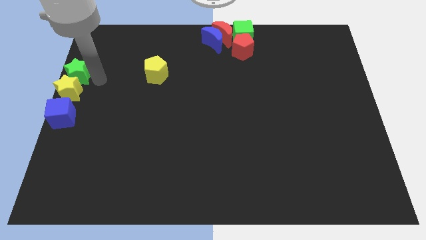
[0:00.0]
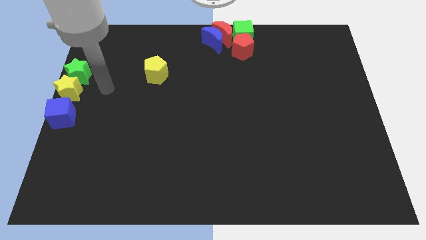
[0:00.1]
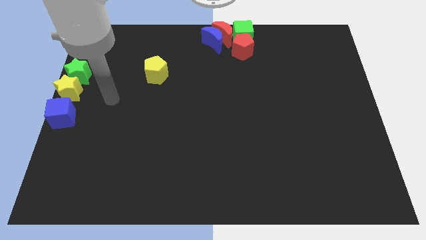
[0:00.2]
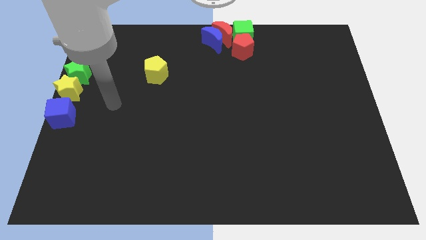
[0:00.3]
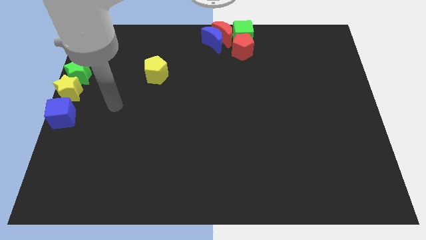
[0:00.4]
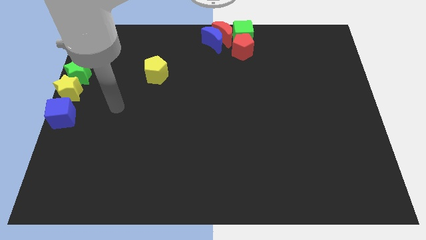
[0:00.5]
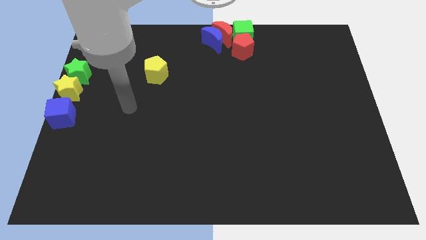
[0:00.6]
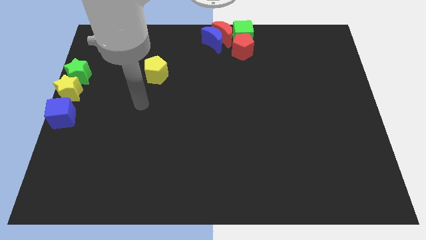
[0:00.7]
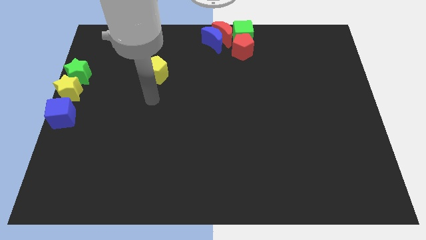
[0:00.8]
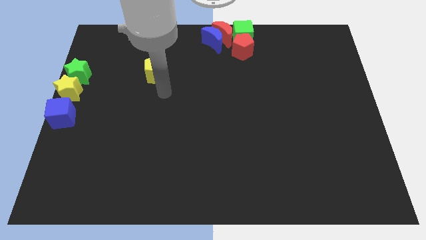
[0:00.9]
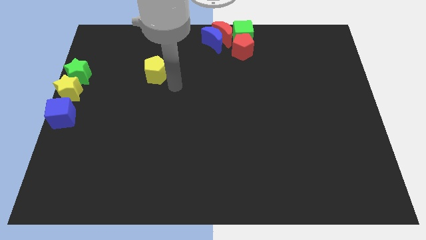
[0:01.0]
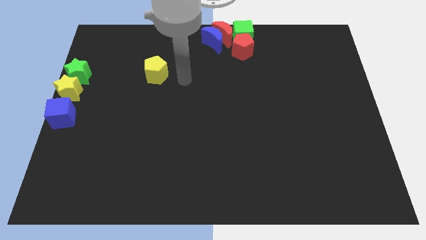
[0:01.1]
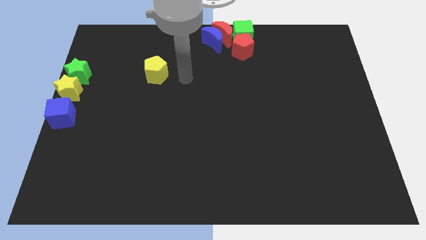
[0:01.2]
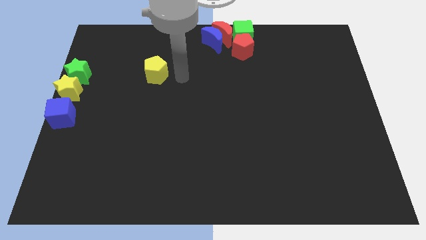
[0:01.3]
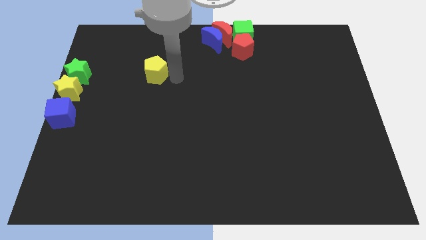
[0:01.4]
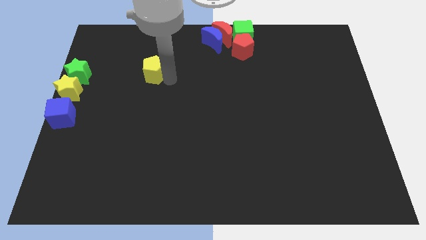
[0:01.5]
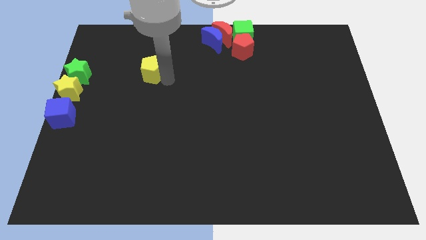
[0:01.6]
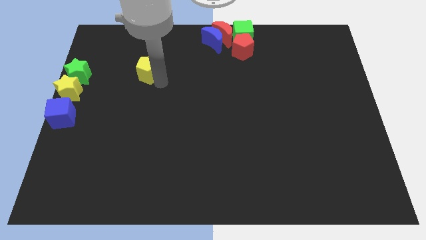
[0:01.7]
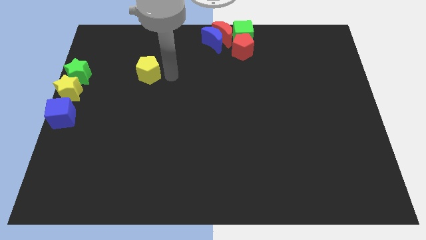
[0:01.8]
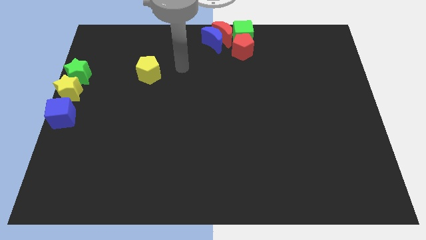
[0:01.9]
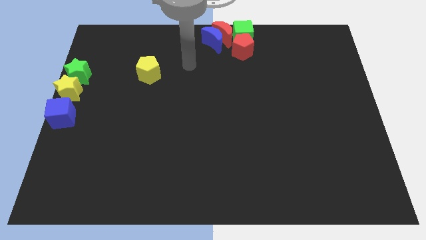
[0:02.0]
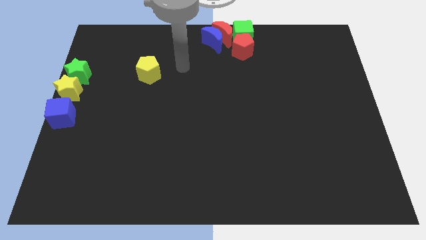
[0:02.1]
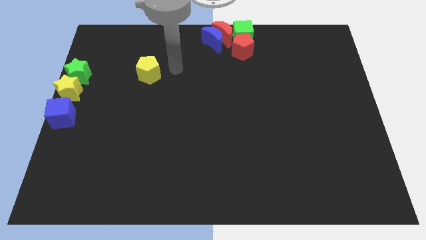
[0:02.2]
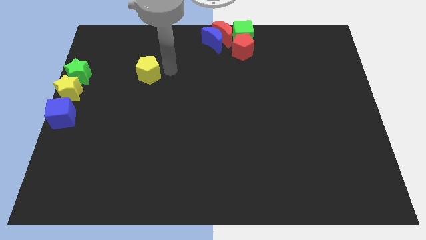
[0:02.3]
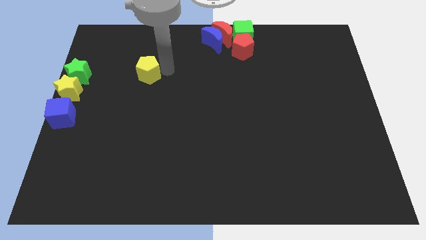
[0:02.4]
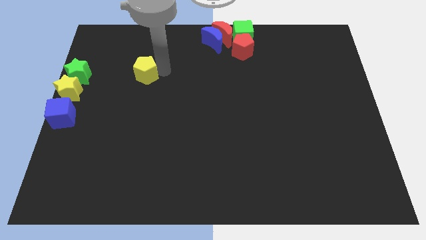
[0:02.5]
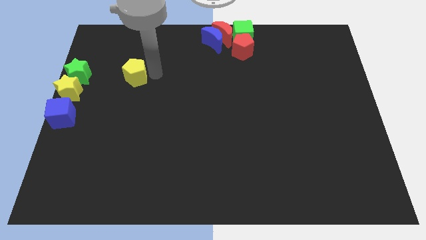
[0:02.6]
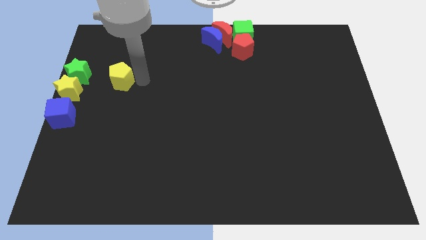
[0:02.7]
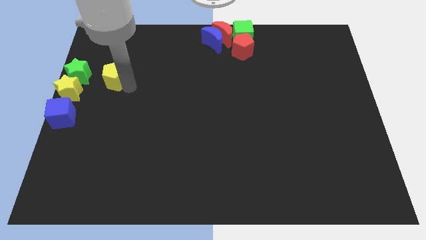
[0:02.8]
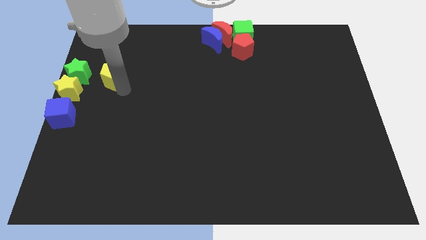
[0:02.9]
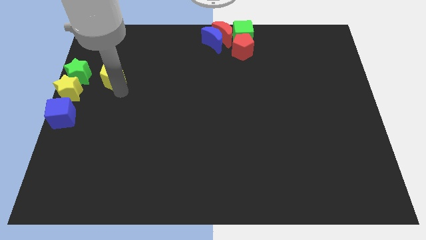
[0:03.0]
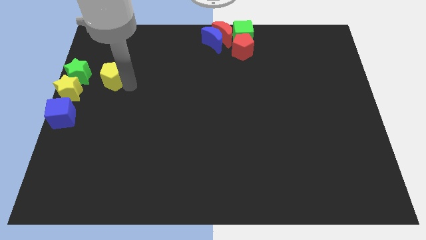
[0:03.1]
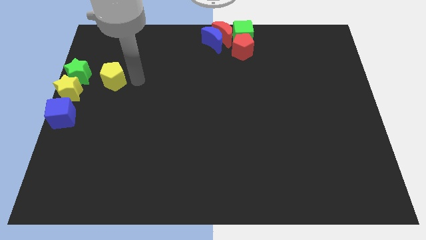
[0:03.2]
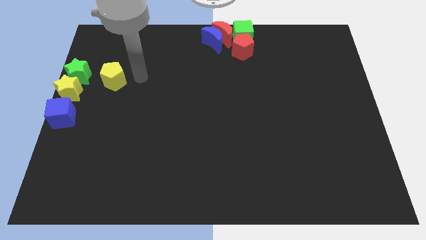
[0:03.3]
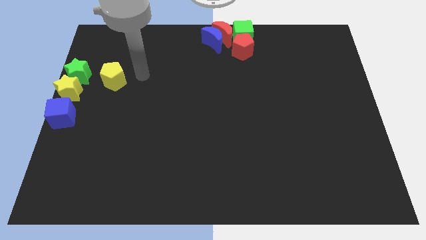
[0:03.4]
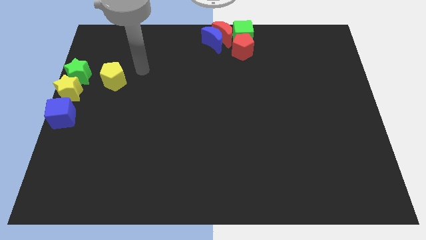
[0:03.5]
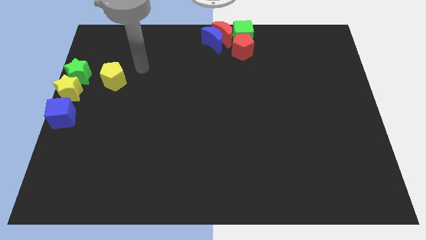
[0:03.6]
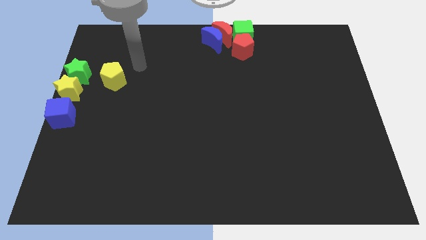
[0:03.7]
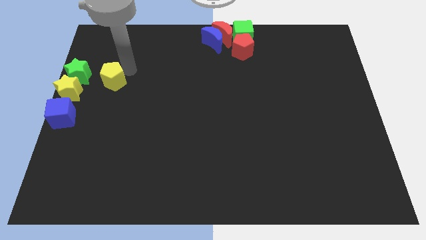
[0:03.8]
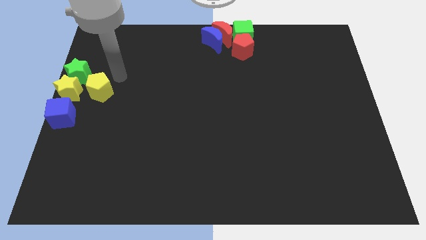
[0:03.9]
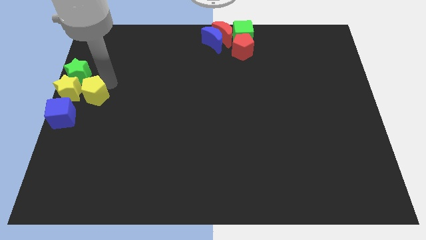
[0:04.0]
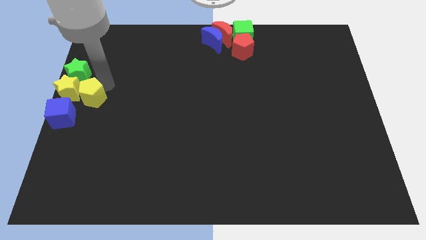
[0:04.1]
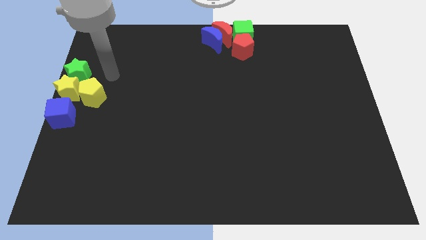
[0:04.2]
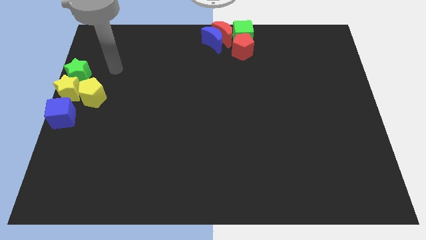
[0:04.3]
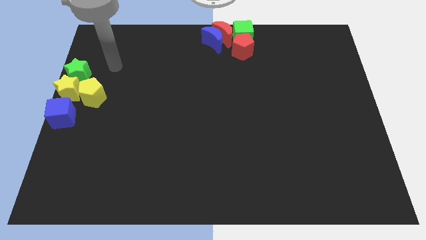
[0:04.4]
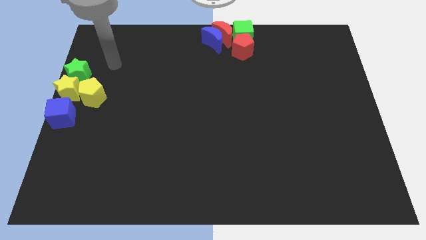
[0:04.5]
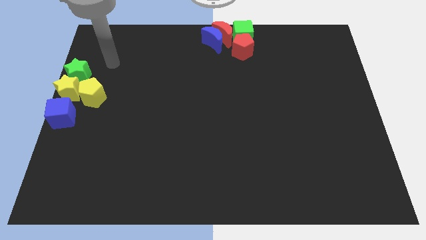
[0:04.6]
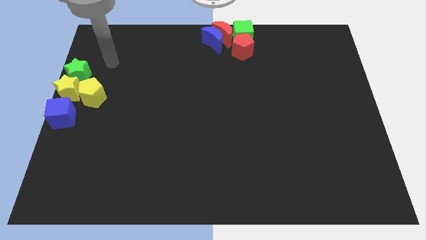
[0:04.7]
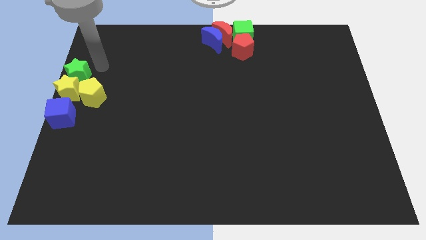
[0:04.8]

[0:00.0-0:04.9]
place the yellow pentagon right to the yellow star

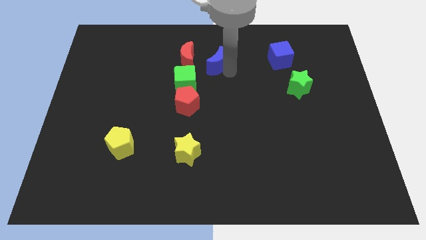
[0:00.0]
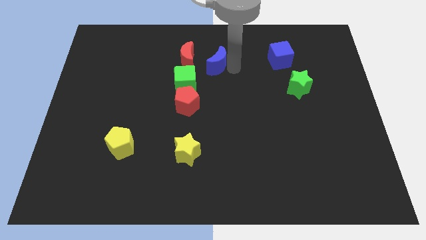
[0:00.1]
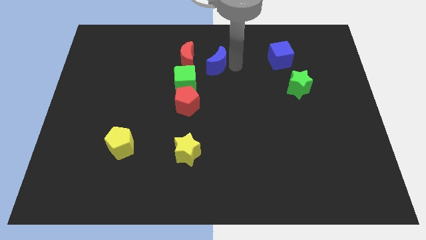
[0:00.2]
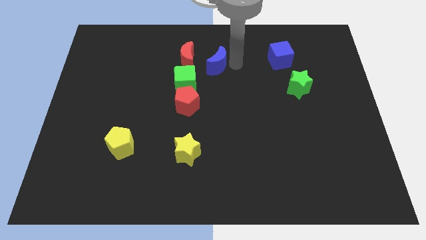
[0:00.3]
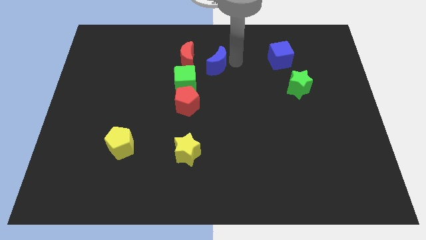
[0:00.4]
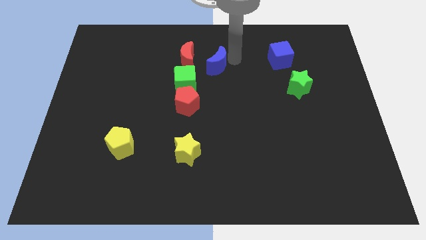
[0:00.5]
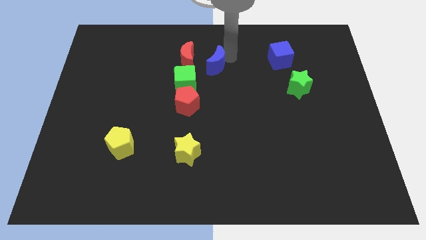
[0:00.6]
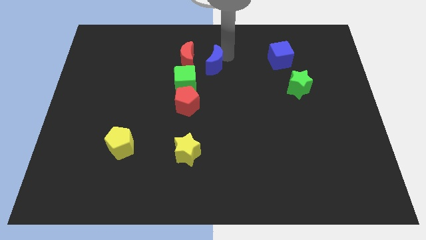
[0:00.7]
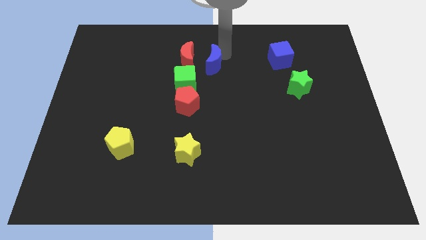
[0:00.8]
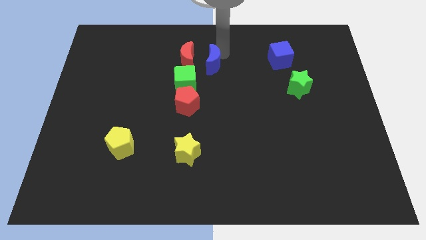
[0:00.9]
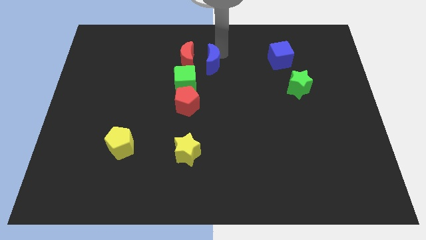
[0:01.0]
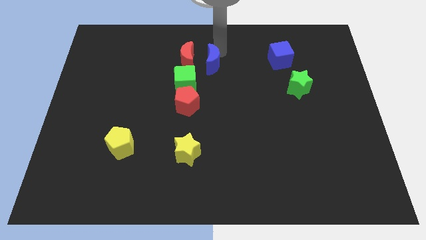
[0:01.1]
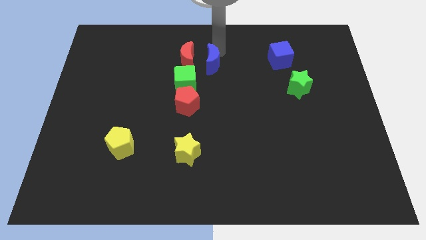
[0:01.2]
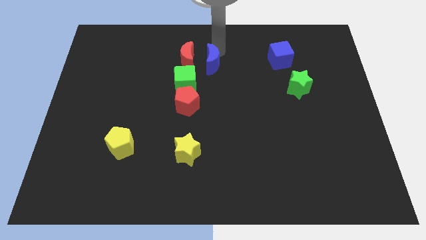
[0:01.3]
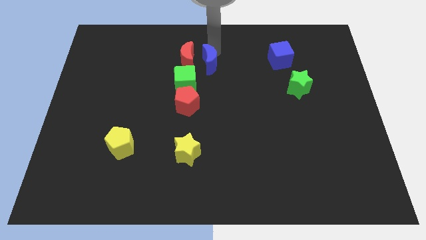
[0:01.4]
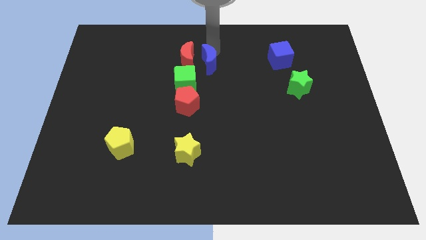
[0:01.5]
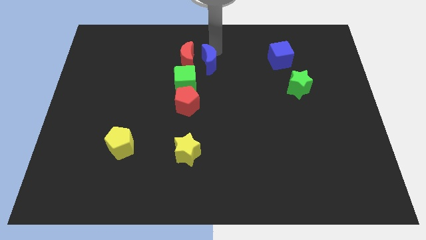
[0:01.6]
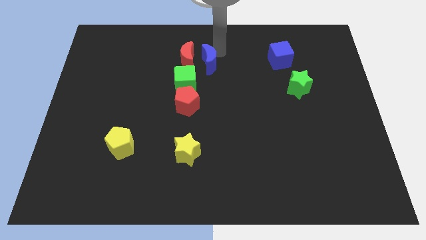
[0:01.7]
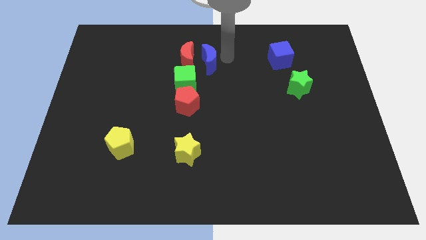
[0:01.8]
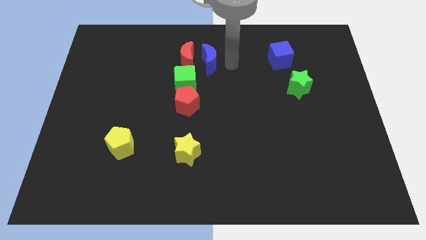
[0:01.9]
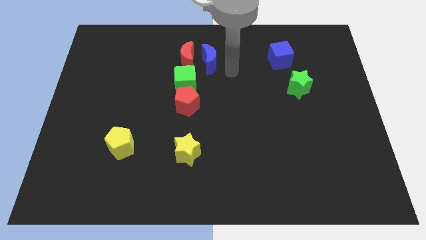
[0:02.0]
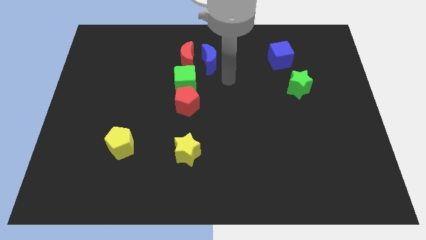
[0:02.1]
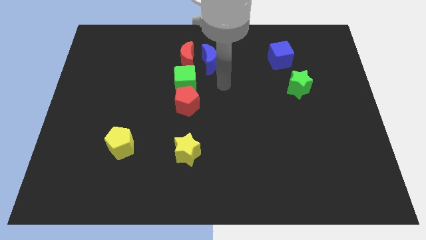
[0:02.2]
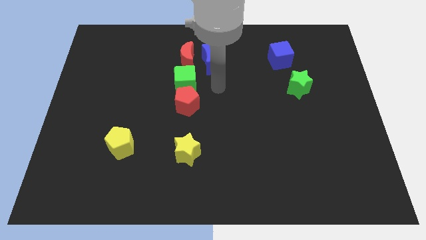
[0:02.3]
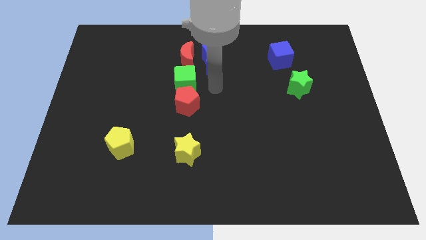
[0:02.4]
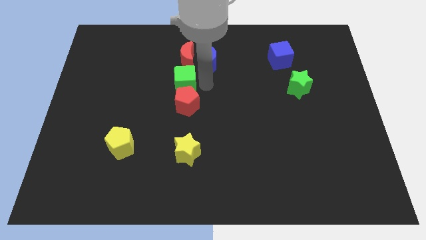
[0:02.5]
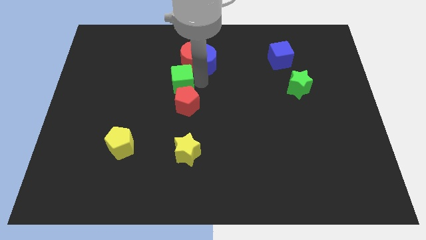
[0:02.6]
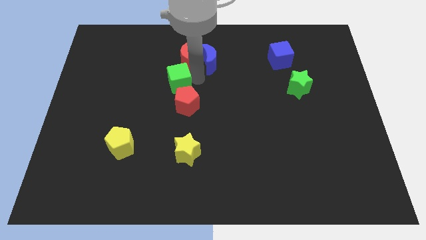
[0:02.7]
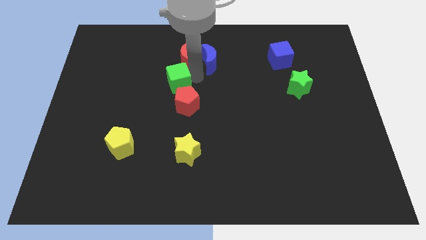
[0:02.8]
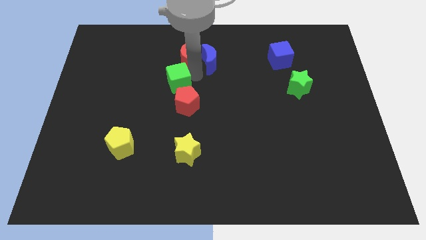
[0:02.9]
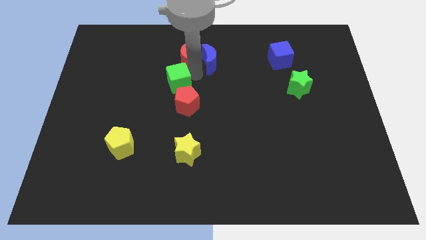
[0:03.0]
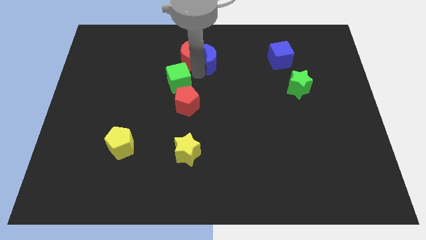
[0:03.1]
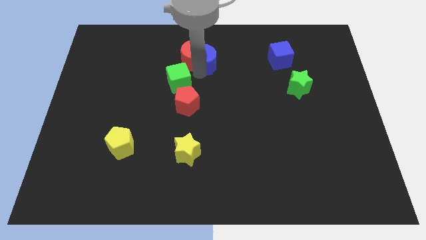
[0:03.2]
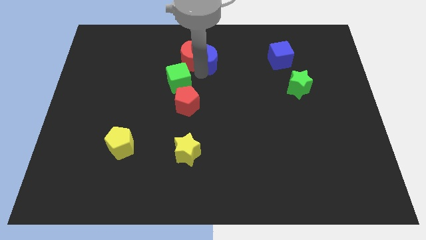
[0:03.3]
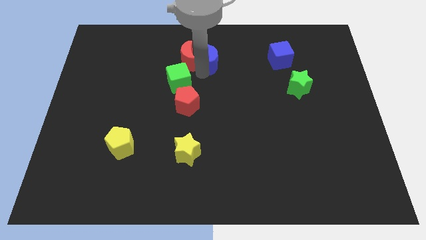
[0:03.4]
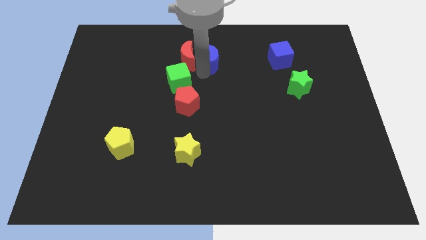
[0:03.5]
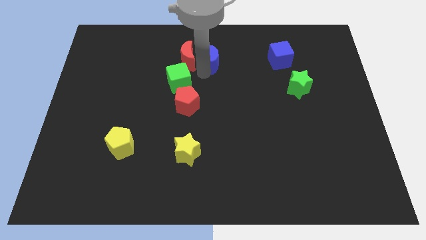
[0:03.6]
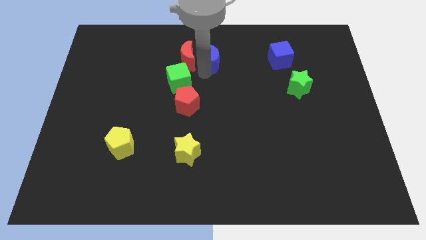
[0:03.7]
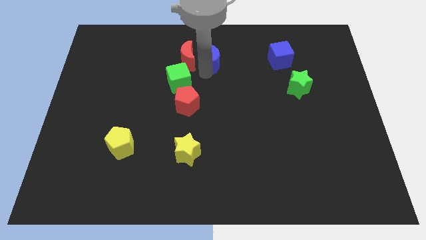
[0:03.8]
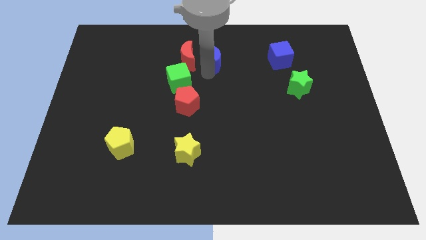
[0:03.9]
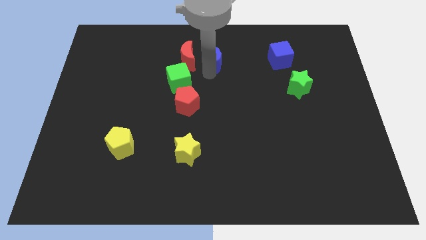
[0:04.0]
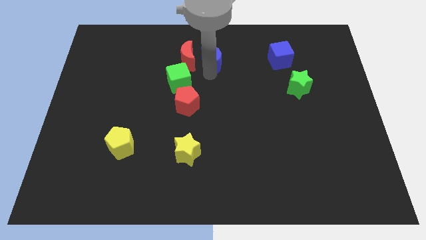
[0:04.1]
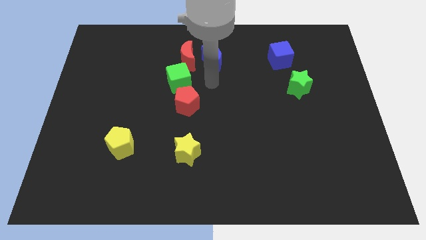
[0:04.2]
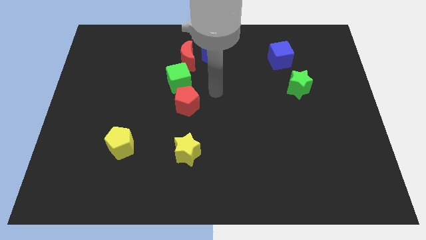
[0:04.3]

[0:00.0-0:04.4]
place the blue crescent right to the red crescent
